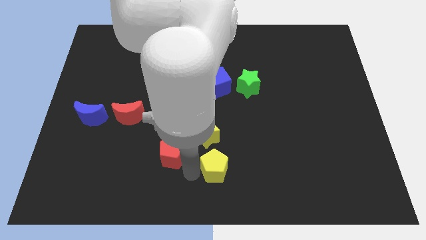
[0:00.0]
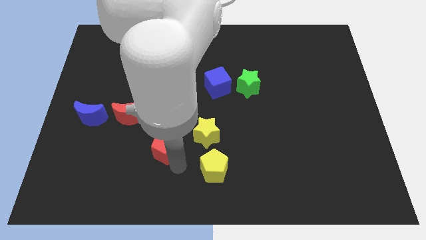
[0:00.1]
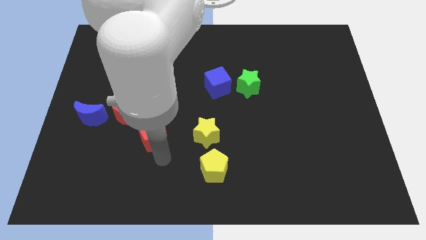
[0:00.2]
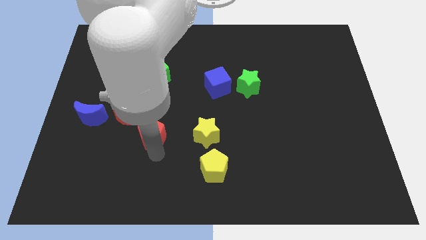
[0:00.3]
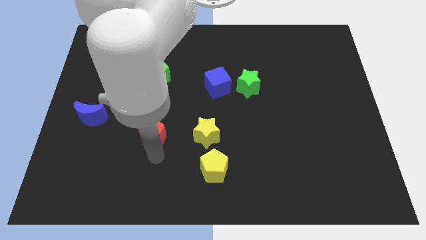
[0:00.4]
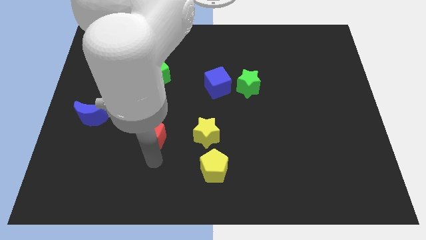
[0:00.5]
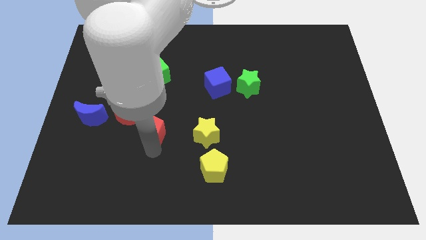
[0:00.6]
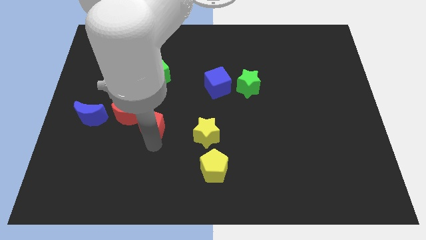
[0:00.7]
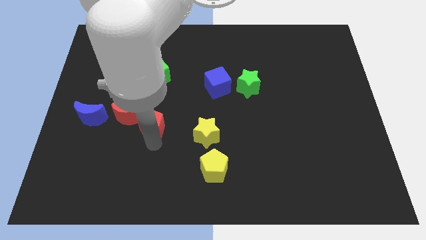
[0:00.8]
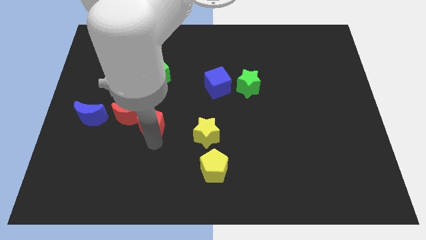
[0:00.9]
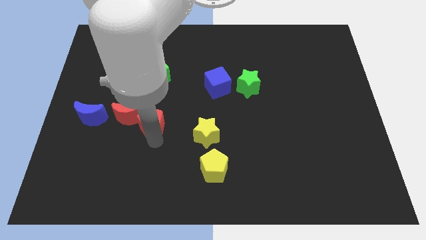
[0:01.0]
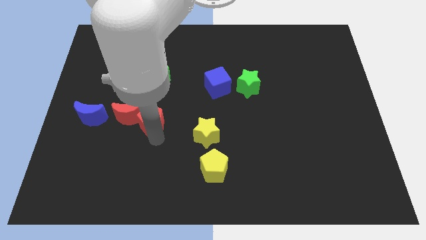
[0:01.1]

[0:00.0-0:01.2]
push red pentagon towards red moon

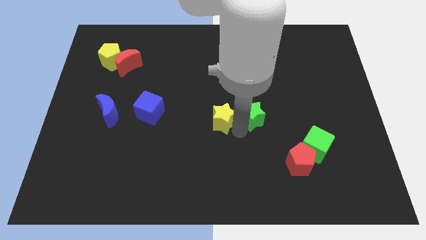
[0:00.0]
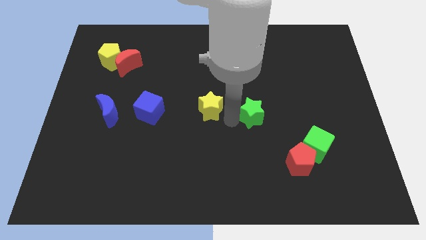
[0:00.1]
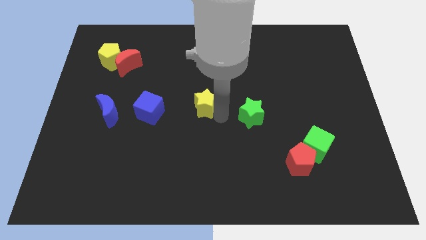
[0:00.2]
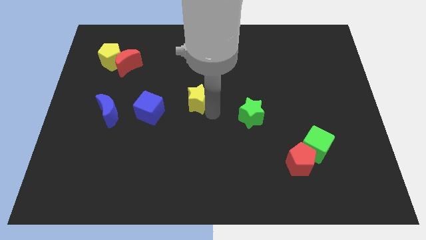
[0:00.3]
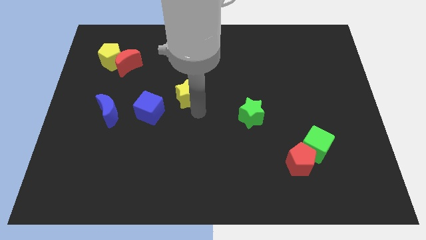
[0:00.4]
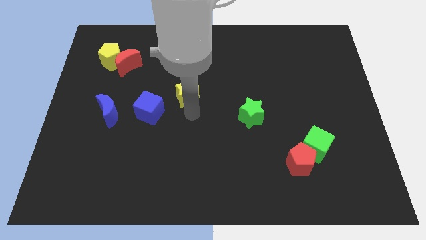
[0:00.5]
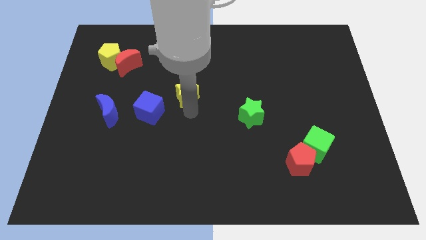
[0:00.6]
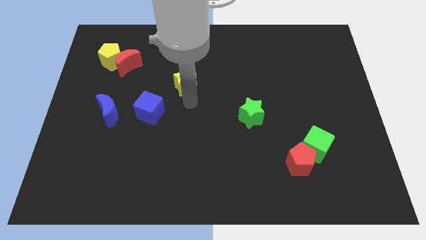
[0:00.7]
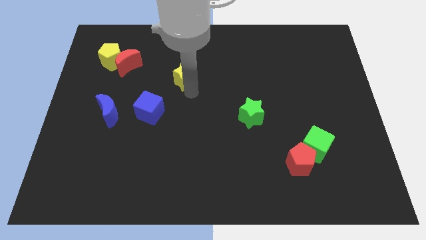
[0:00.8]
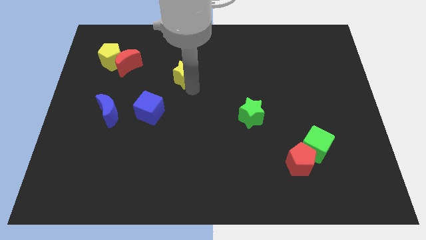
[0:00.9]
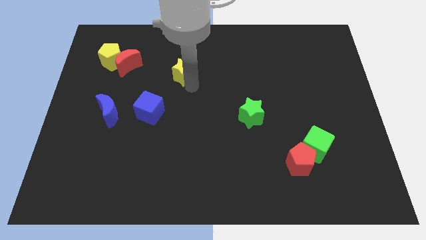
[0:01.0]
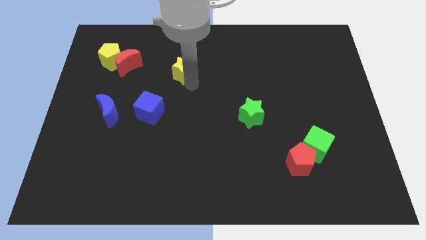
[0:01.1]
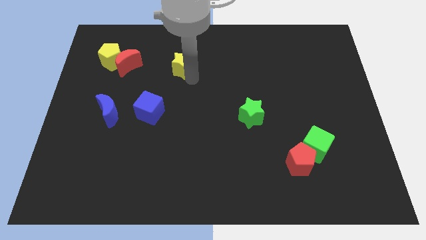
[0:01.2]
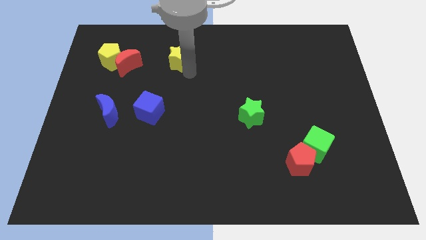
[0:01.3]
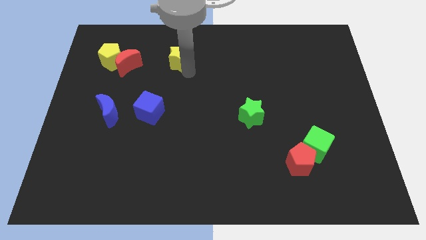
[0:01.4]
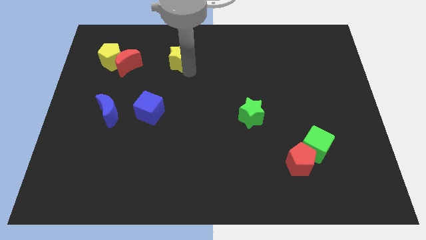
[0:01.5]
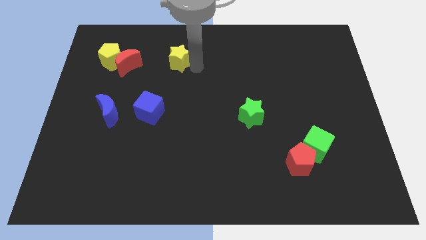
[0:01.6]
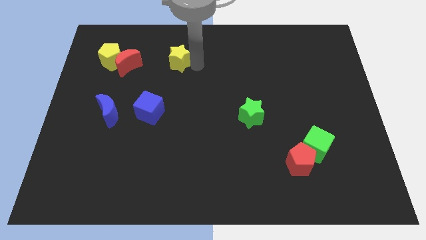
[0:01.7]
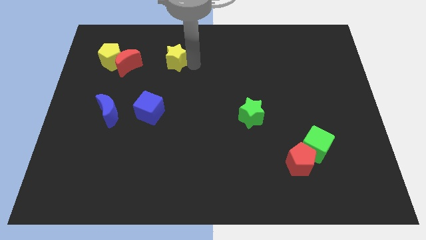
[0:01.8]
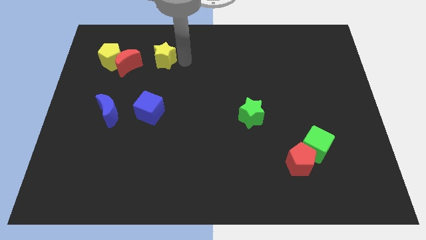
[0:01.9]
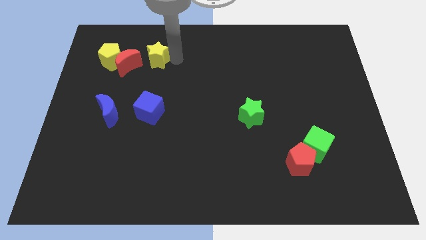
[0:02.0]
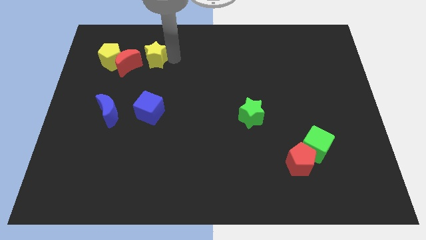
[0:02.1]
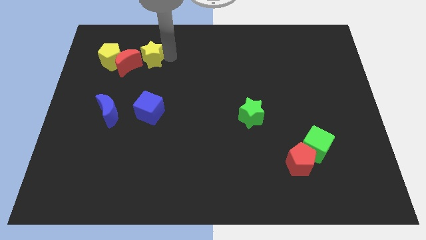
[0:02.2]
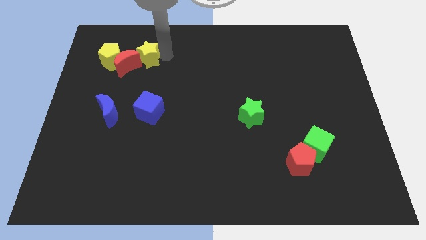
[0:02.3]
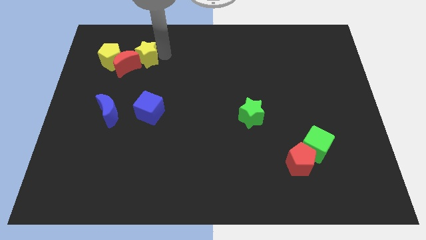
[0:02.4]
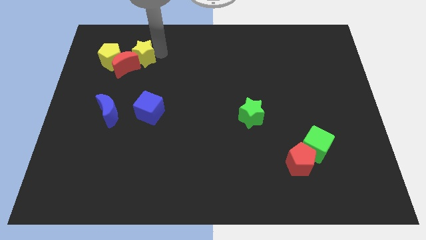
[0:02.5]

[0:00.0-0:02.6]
push yellow star near red moon

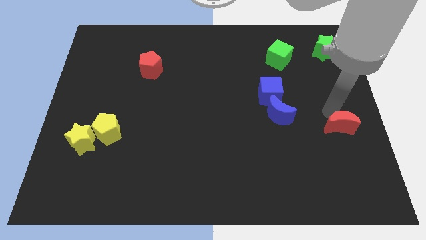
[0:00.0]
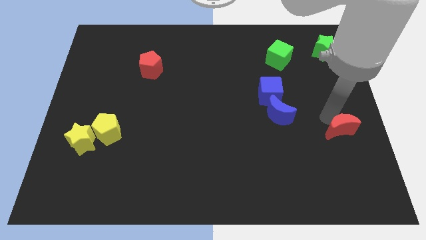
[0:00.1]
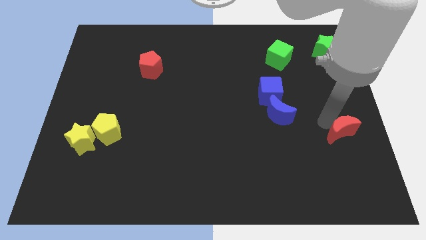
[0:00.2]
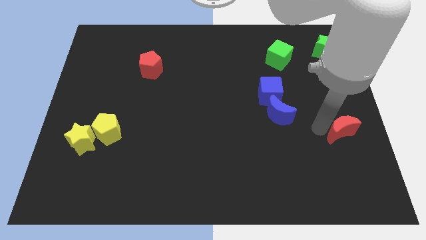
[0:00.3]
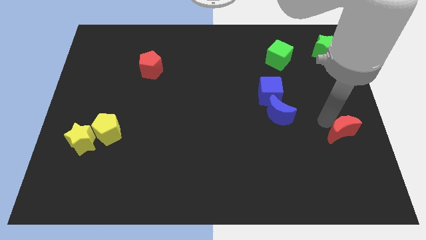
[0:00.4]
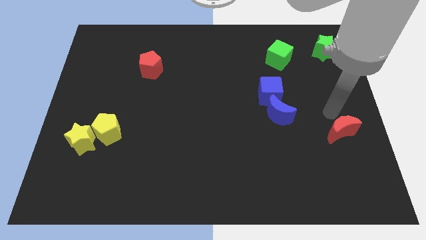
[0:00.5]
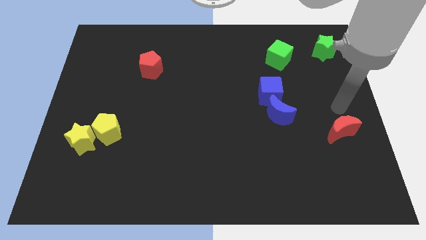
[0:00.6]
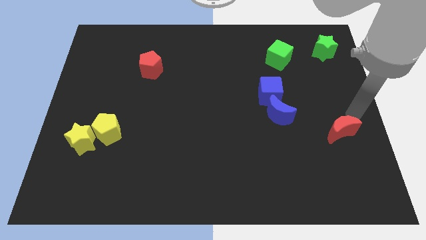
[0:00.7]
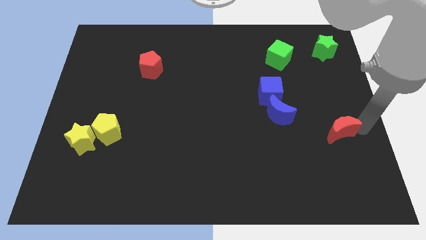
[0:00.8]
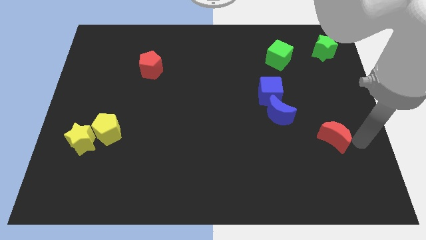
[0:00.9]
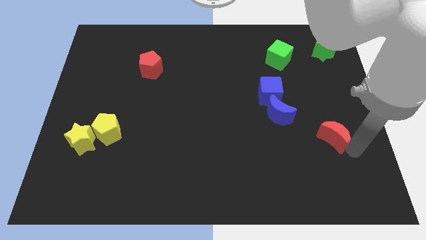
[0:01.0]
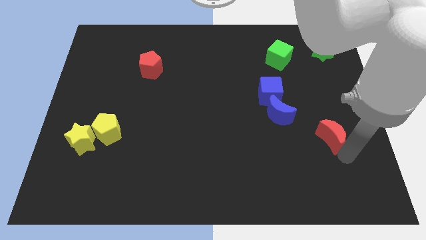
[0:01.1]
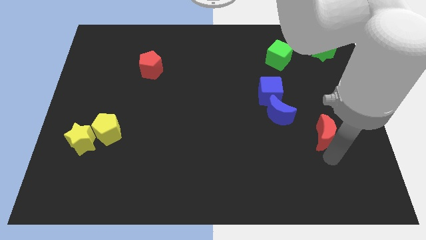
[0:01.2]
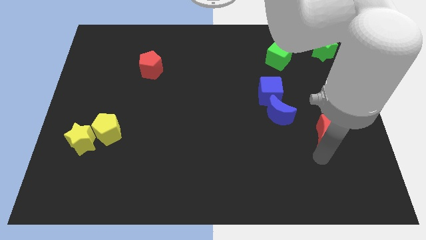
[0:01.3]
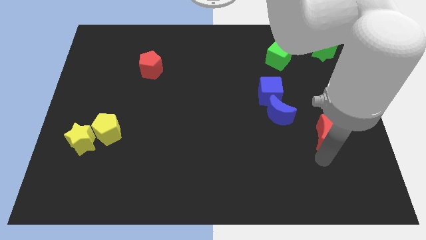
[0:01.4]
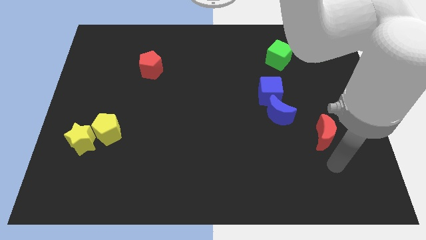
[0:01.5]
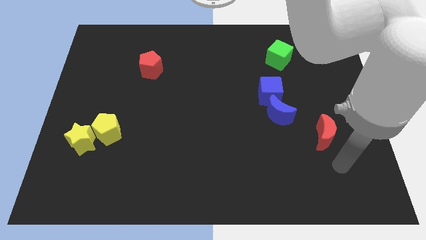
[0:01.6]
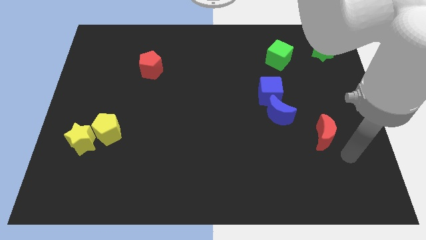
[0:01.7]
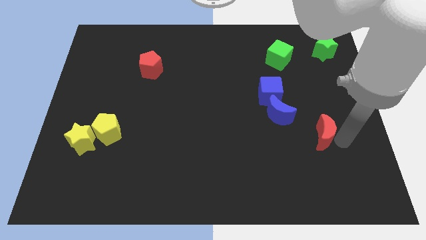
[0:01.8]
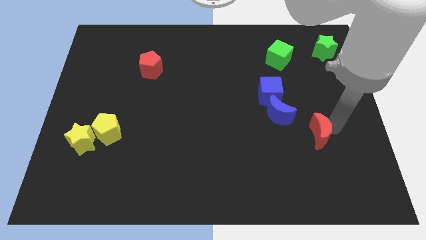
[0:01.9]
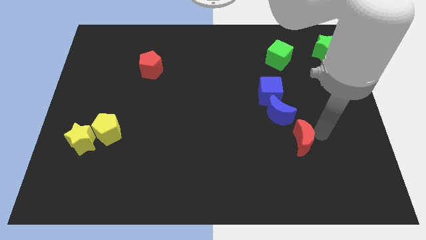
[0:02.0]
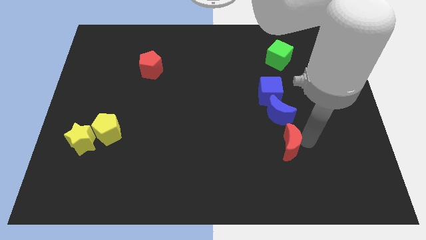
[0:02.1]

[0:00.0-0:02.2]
place red moon to the bottom right of blue moon

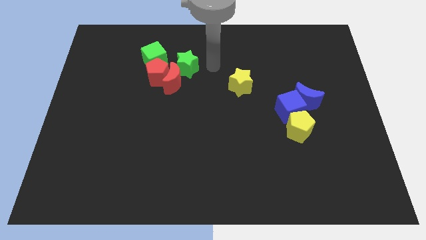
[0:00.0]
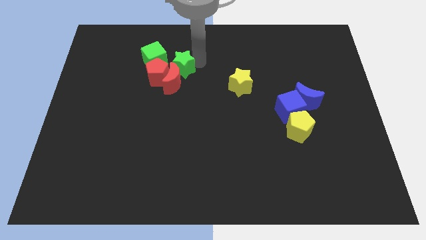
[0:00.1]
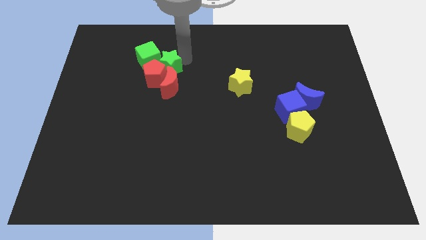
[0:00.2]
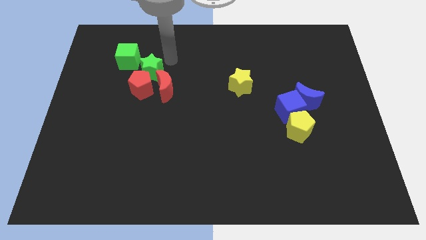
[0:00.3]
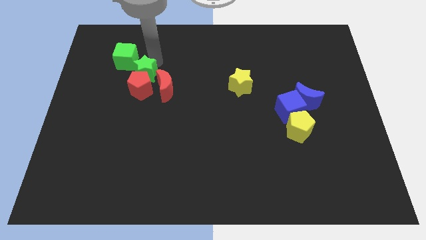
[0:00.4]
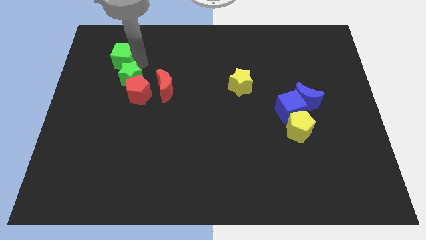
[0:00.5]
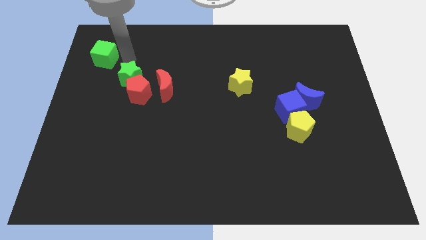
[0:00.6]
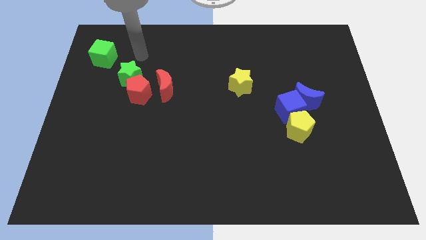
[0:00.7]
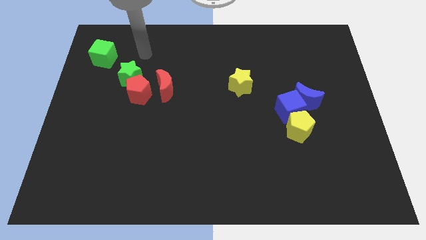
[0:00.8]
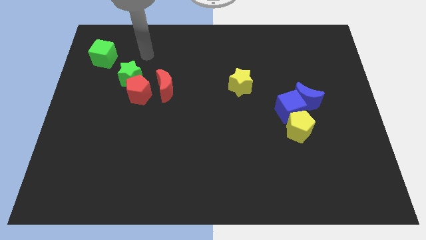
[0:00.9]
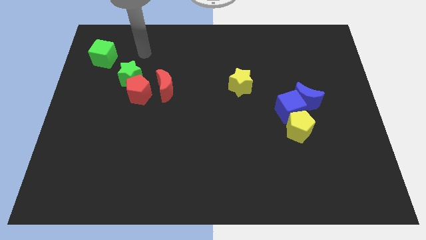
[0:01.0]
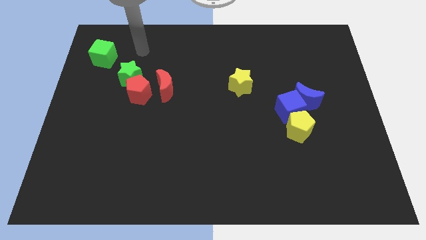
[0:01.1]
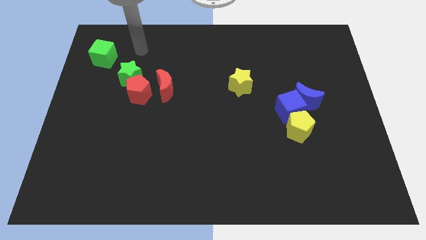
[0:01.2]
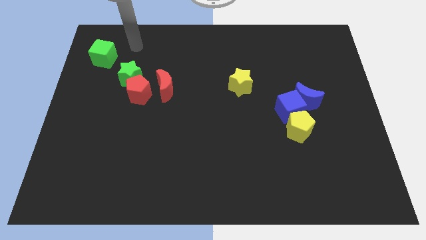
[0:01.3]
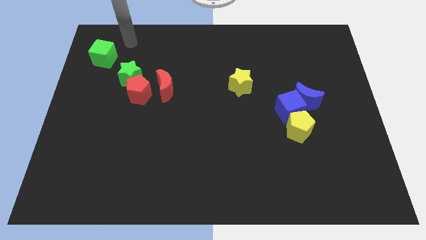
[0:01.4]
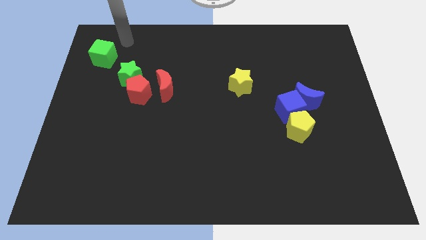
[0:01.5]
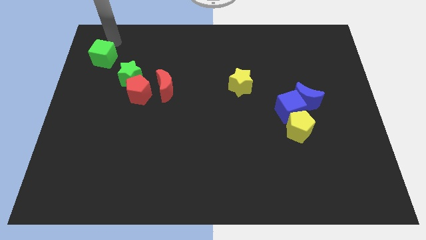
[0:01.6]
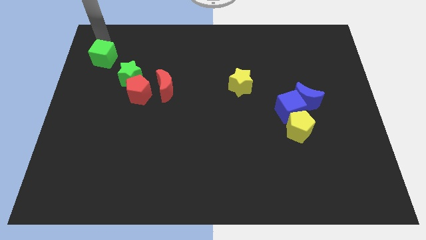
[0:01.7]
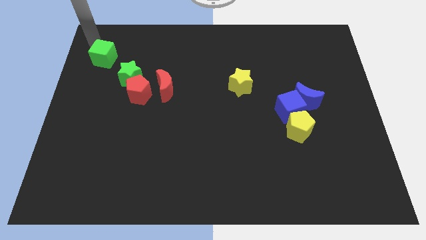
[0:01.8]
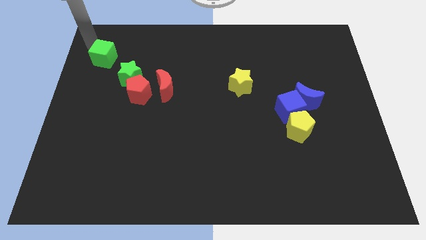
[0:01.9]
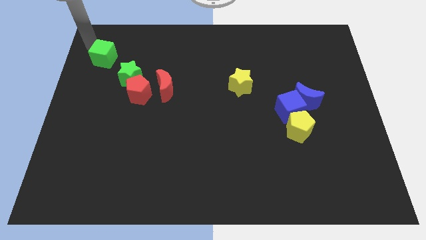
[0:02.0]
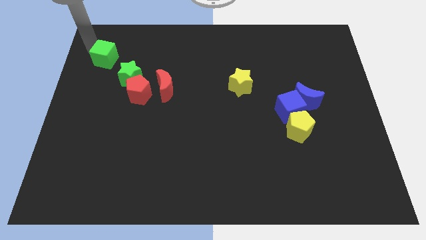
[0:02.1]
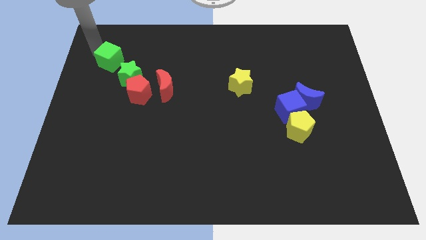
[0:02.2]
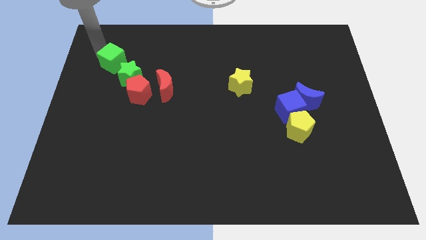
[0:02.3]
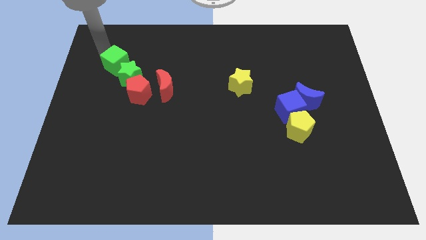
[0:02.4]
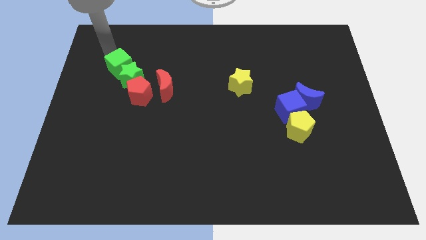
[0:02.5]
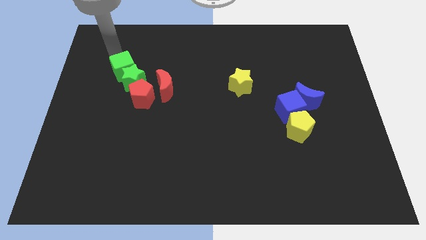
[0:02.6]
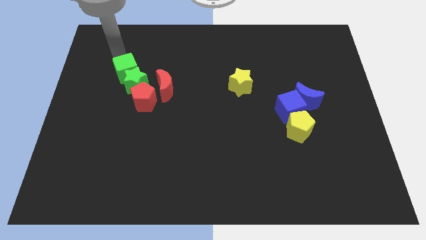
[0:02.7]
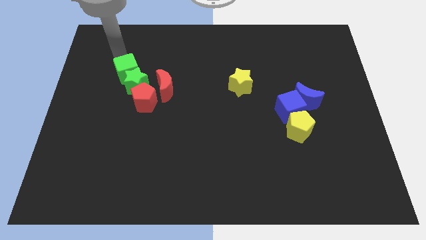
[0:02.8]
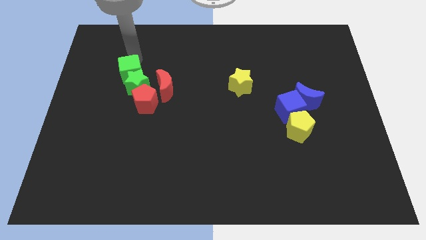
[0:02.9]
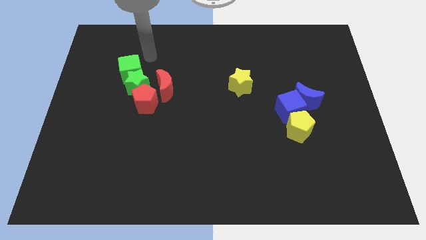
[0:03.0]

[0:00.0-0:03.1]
move green cube into the green star
